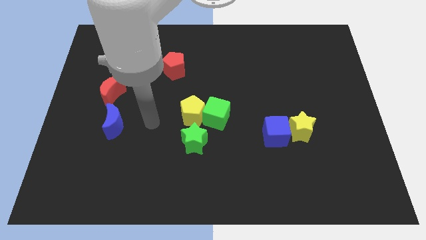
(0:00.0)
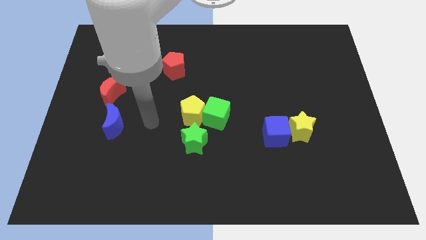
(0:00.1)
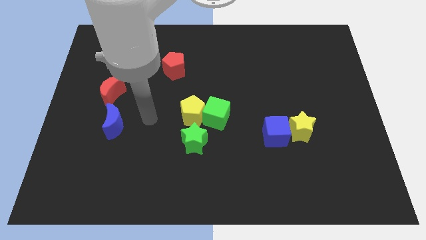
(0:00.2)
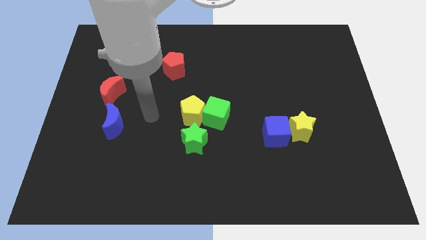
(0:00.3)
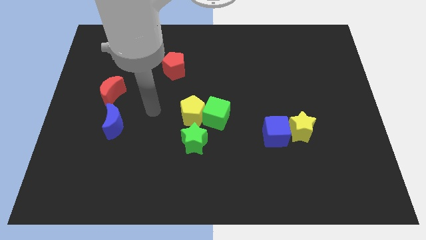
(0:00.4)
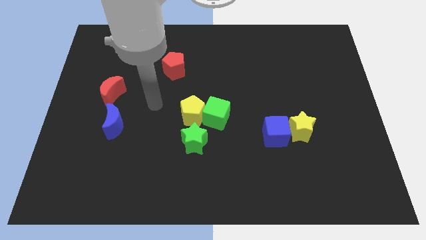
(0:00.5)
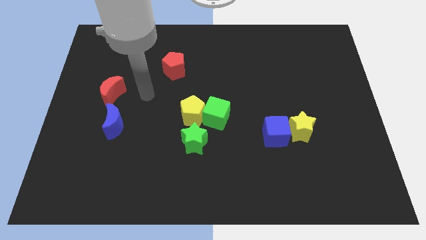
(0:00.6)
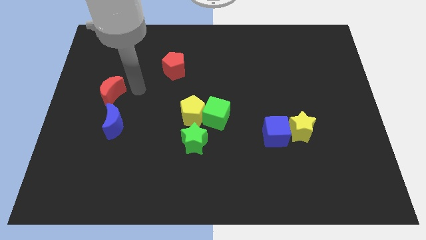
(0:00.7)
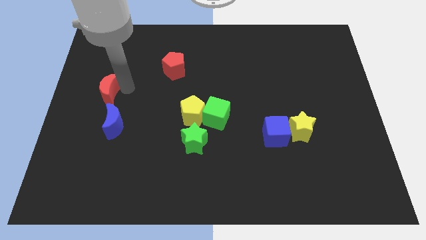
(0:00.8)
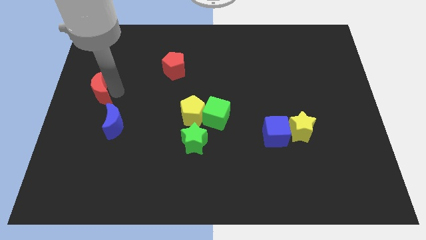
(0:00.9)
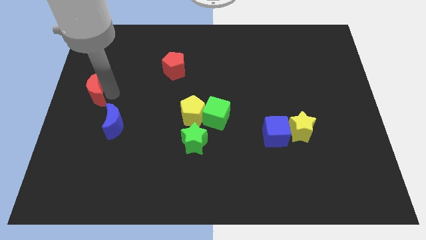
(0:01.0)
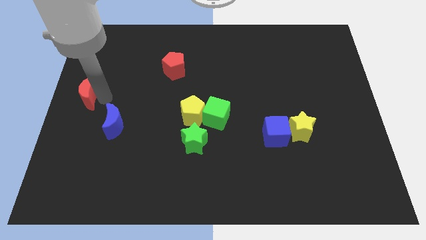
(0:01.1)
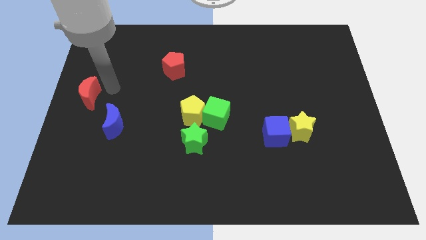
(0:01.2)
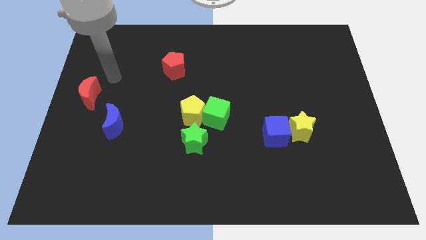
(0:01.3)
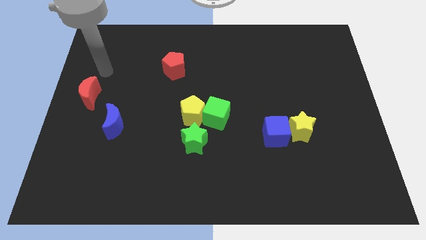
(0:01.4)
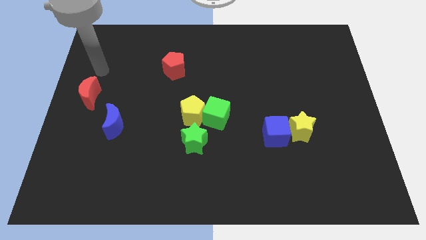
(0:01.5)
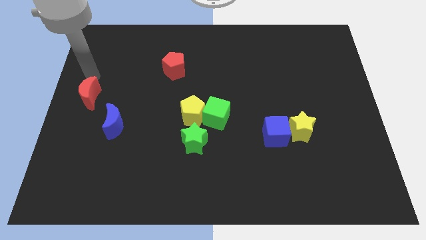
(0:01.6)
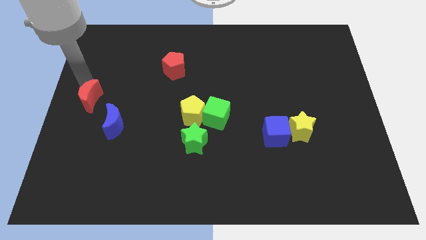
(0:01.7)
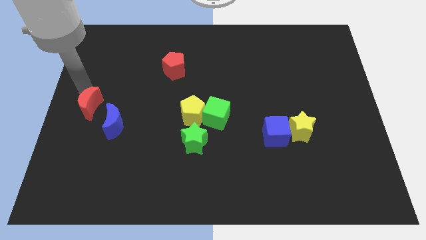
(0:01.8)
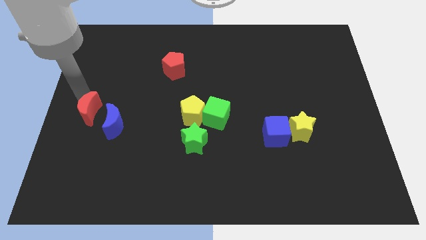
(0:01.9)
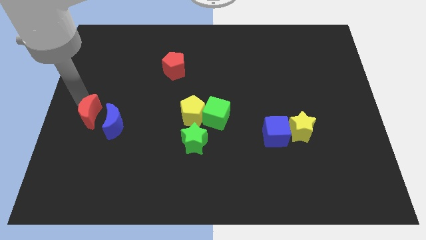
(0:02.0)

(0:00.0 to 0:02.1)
slightly move the red moon towards the bottom side

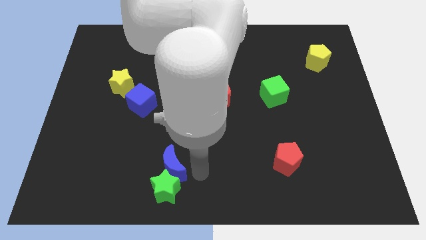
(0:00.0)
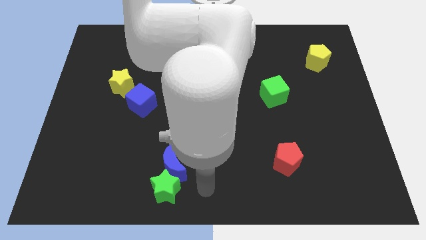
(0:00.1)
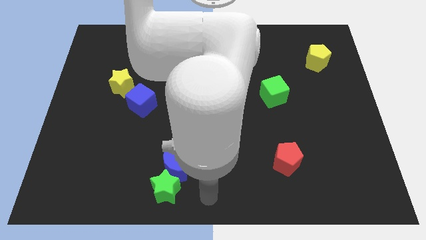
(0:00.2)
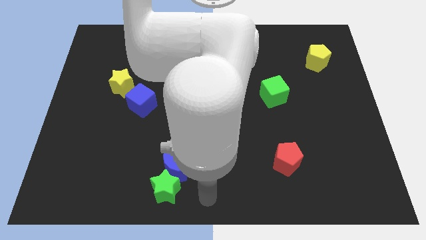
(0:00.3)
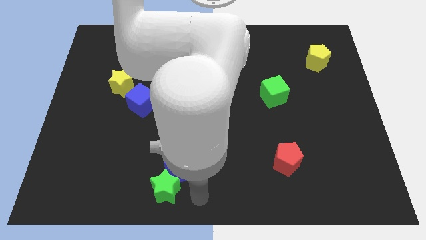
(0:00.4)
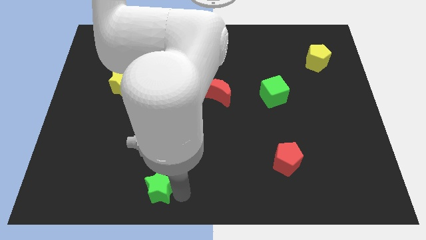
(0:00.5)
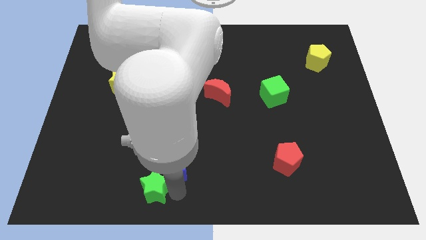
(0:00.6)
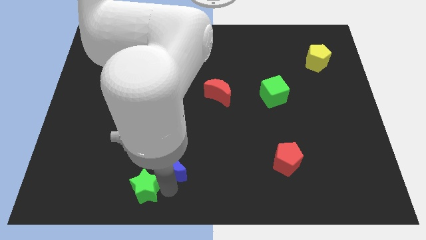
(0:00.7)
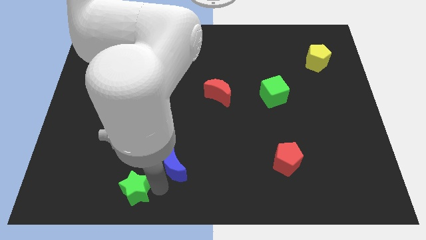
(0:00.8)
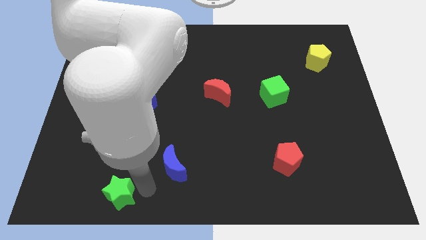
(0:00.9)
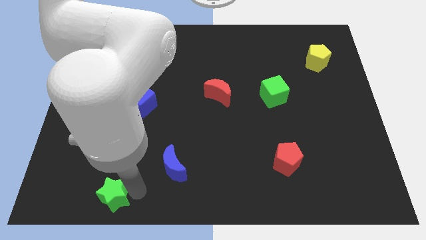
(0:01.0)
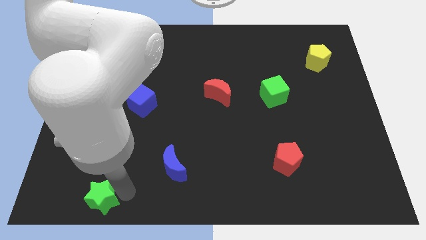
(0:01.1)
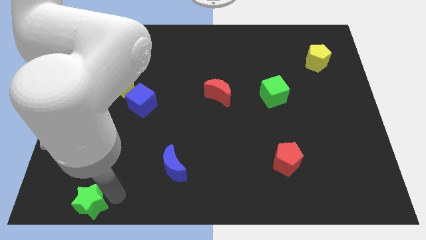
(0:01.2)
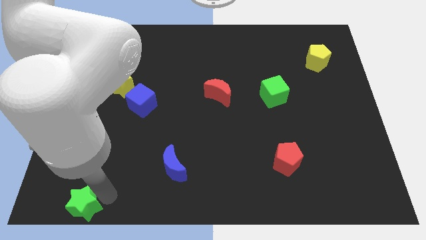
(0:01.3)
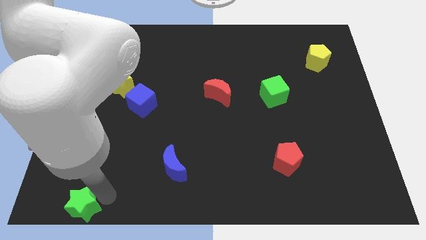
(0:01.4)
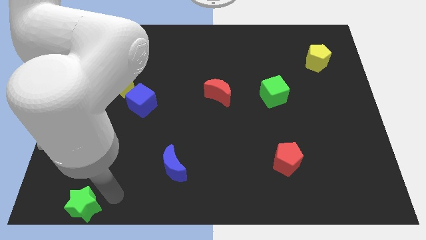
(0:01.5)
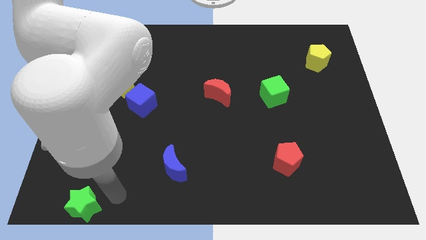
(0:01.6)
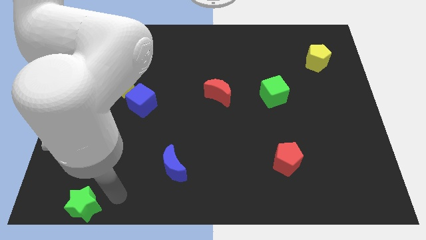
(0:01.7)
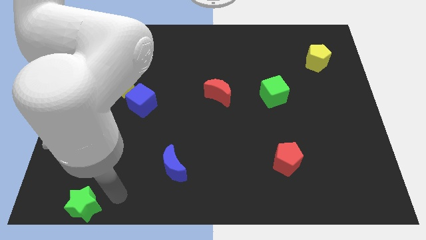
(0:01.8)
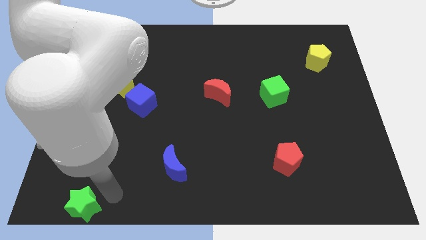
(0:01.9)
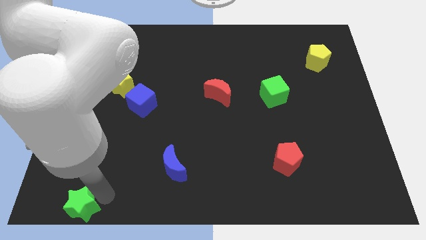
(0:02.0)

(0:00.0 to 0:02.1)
move the green star to the left of the board

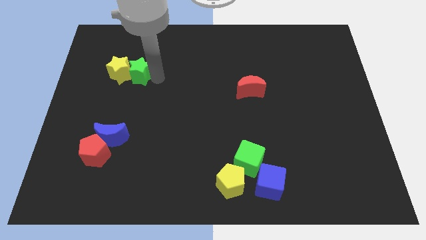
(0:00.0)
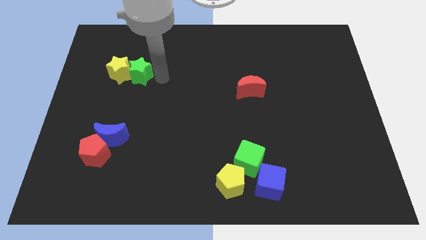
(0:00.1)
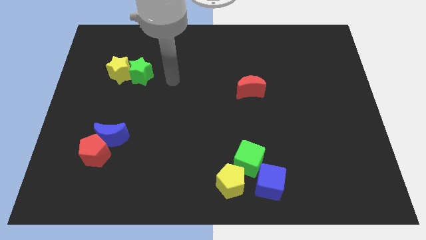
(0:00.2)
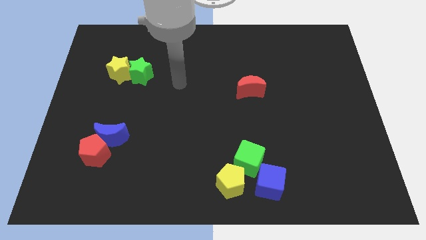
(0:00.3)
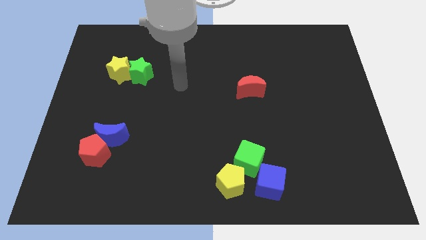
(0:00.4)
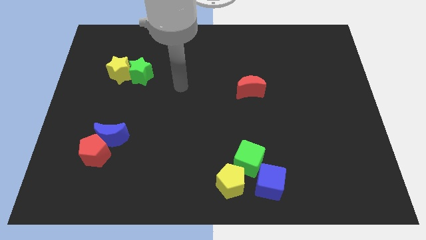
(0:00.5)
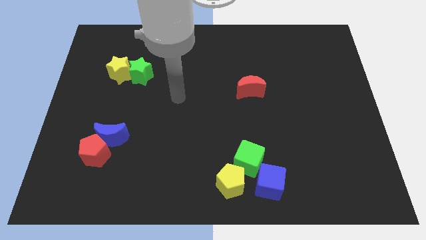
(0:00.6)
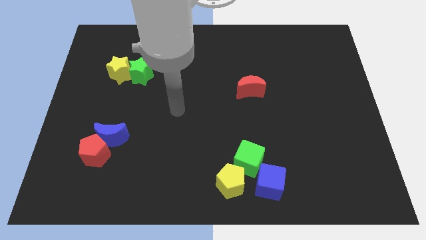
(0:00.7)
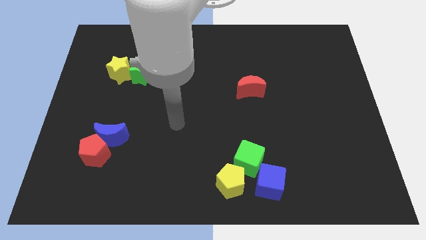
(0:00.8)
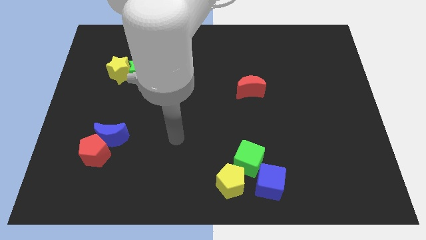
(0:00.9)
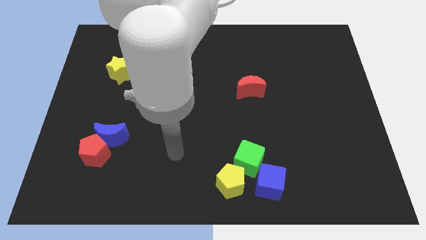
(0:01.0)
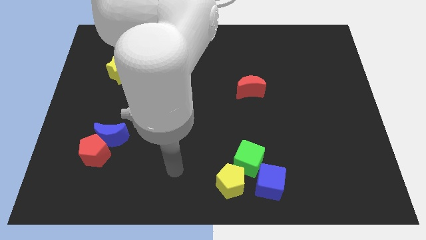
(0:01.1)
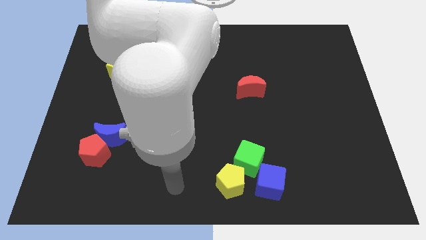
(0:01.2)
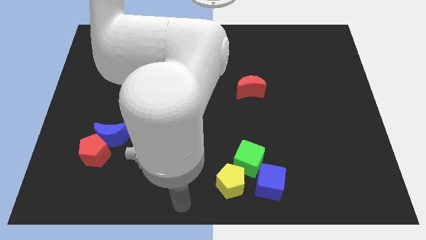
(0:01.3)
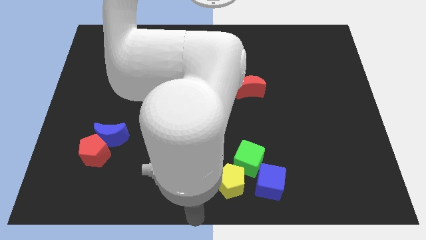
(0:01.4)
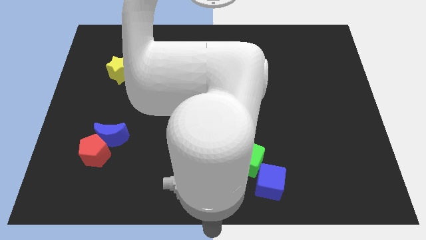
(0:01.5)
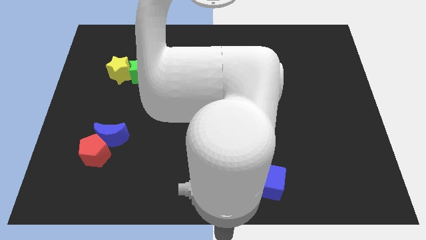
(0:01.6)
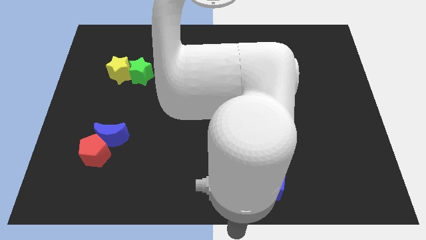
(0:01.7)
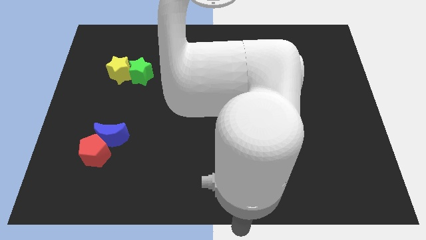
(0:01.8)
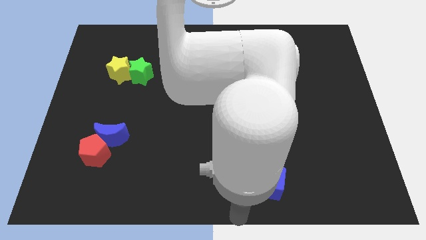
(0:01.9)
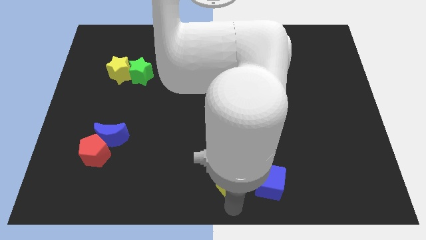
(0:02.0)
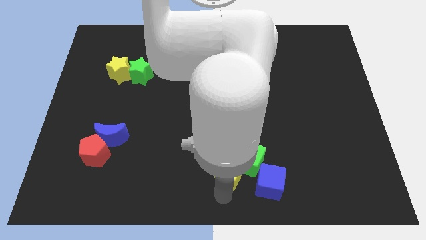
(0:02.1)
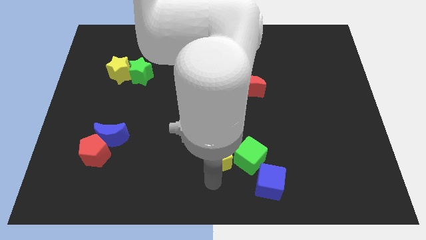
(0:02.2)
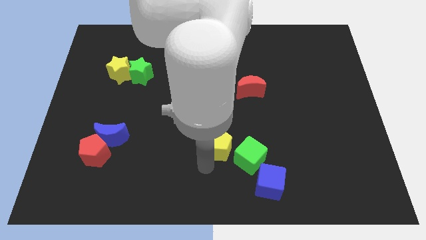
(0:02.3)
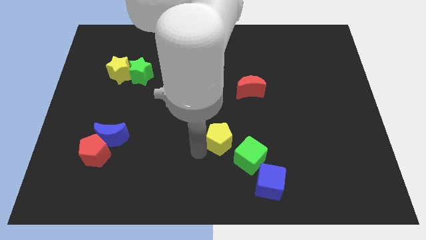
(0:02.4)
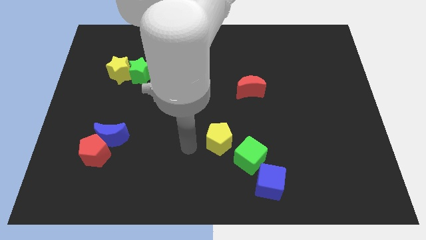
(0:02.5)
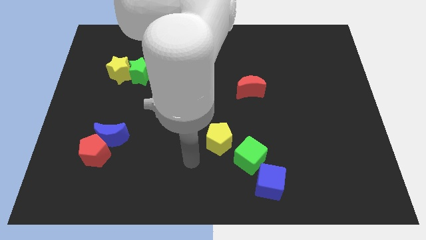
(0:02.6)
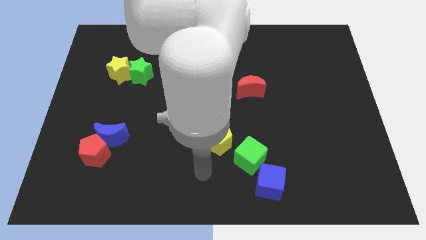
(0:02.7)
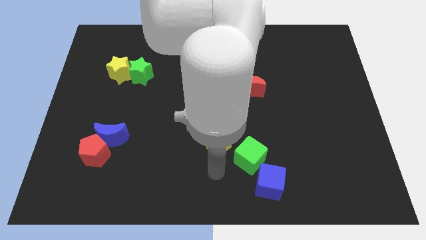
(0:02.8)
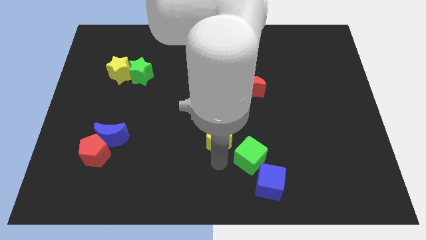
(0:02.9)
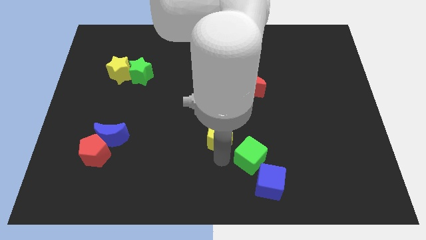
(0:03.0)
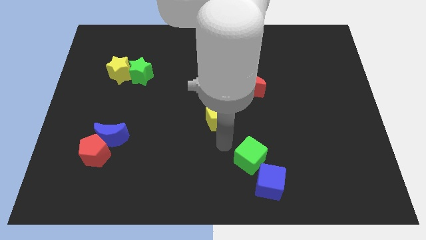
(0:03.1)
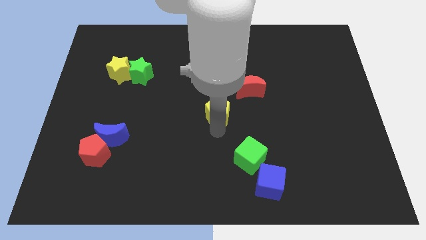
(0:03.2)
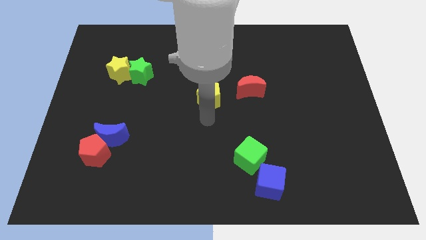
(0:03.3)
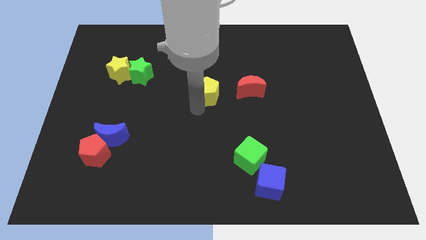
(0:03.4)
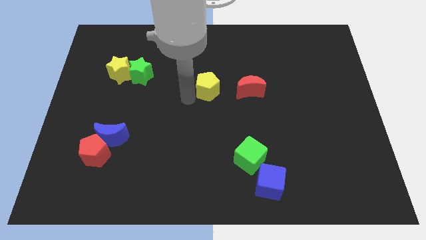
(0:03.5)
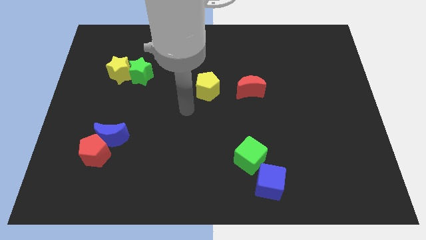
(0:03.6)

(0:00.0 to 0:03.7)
place the yellow pentagon left to the red moon

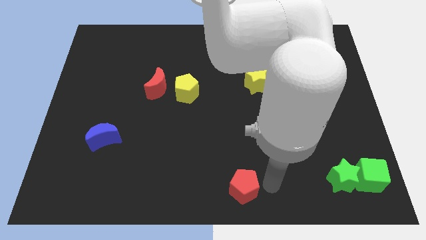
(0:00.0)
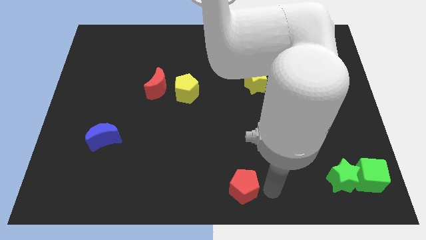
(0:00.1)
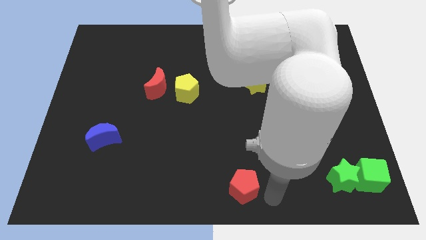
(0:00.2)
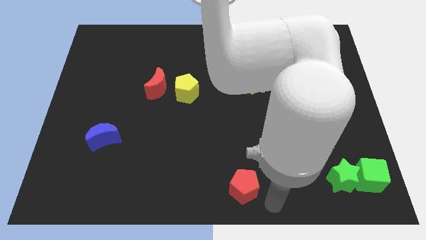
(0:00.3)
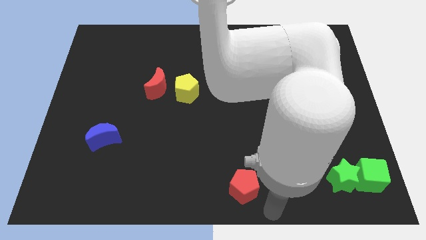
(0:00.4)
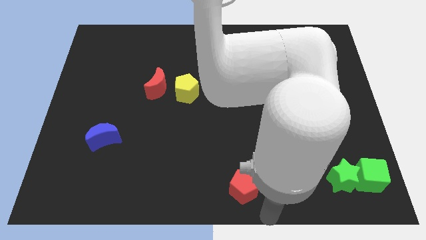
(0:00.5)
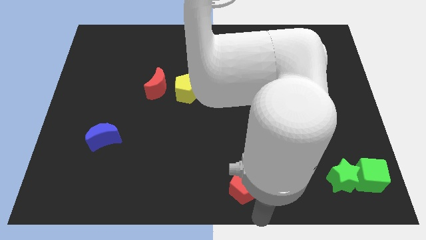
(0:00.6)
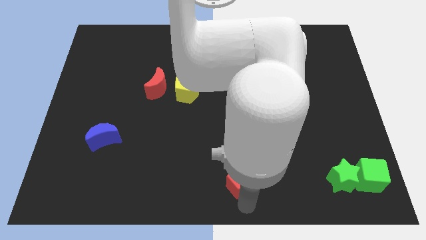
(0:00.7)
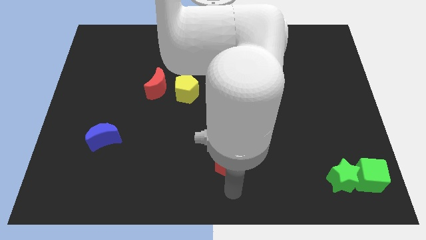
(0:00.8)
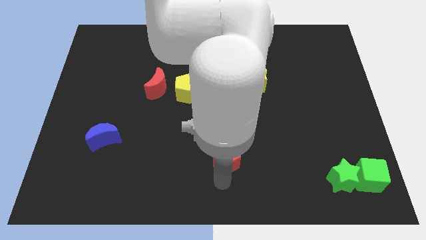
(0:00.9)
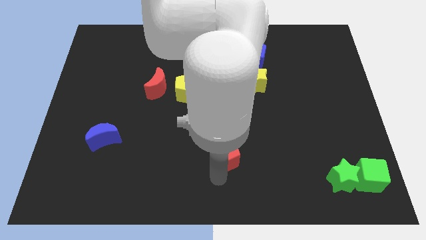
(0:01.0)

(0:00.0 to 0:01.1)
push red pentagon slightly upwards

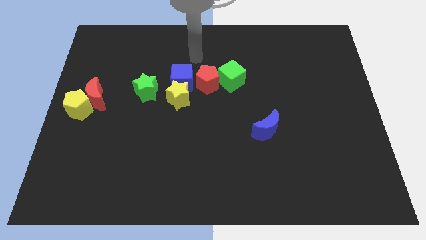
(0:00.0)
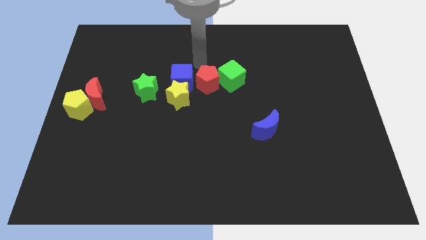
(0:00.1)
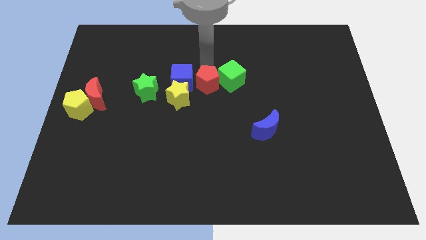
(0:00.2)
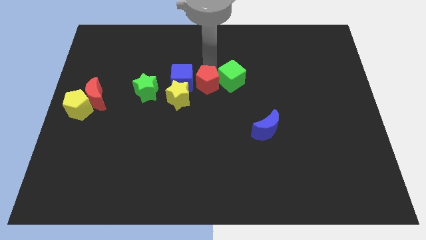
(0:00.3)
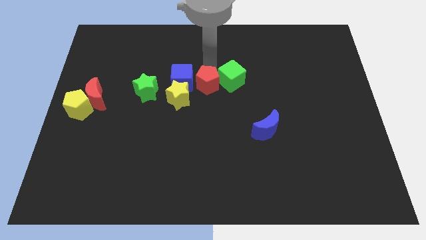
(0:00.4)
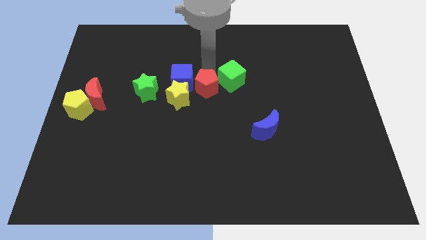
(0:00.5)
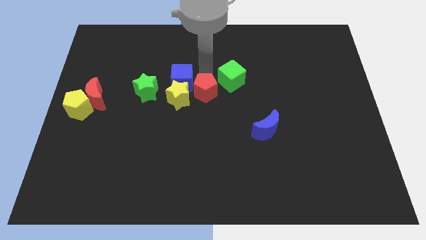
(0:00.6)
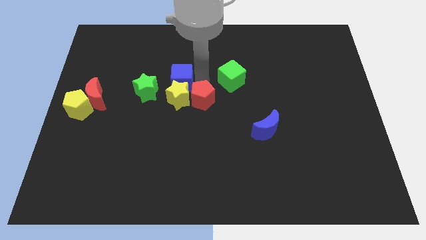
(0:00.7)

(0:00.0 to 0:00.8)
place the red pentagon right to the yellow star
